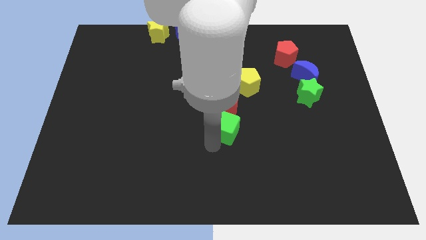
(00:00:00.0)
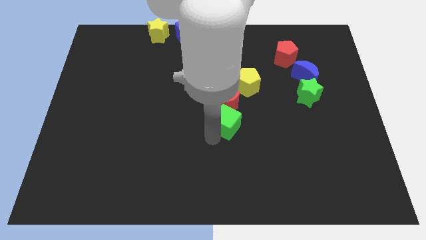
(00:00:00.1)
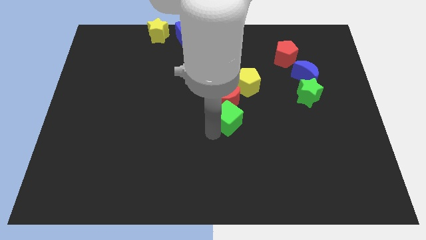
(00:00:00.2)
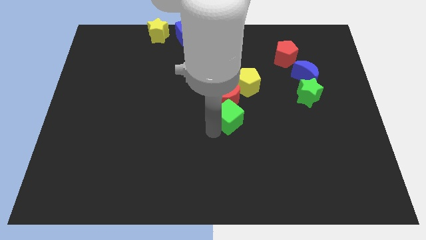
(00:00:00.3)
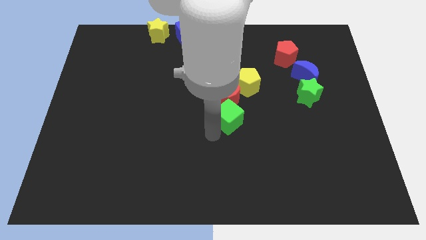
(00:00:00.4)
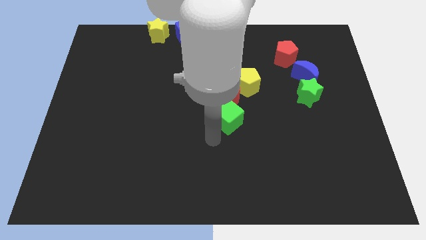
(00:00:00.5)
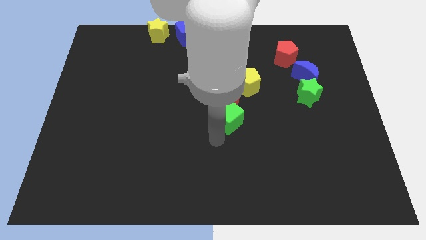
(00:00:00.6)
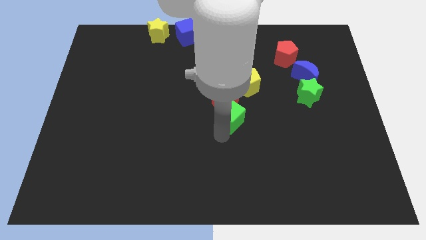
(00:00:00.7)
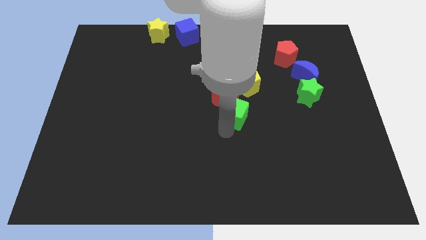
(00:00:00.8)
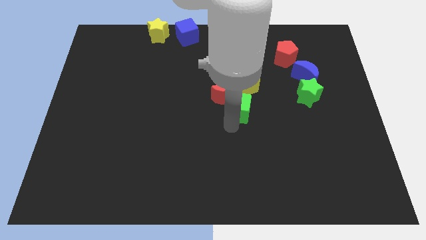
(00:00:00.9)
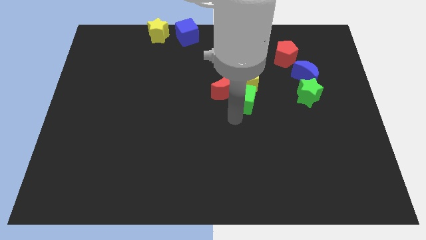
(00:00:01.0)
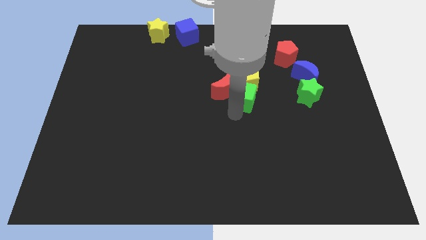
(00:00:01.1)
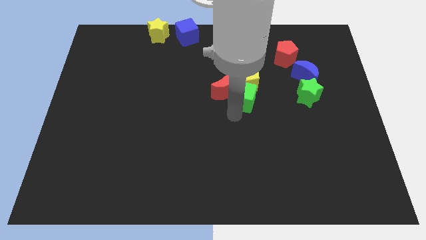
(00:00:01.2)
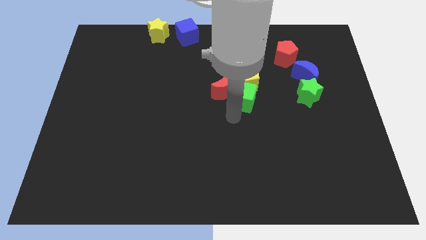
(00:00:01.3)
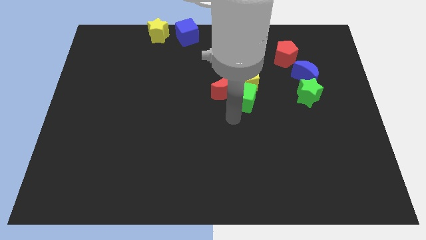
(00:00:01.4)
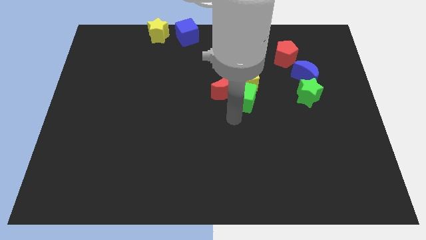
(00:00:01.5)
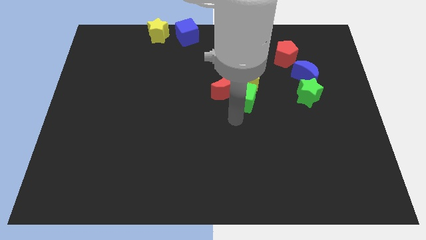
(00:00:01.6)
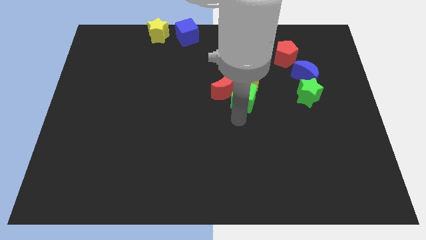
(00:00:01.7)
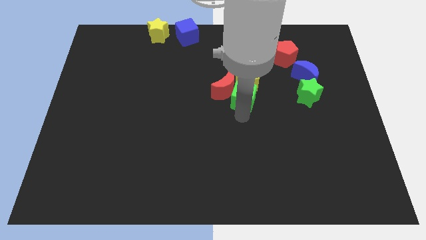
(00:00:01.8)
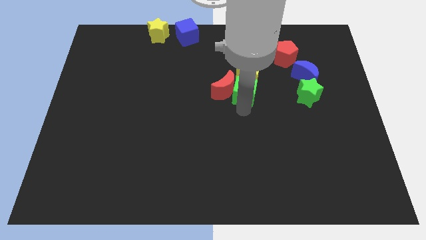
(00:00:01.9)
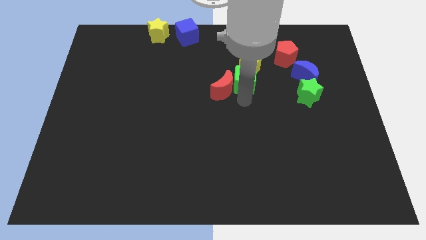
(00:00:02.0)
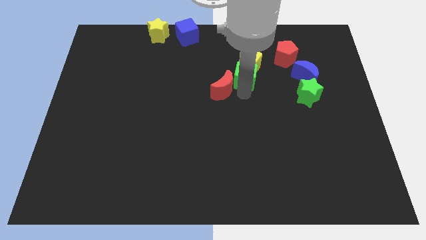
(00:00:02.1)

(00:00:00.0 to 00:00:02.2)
slide the green cube into the yellow pentagon

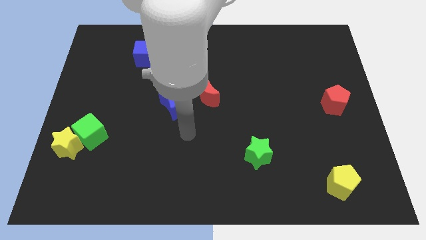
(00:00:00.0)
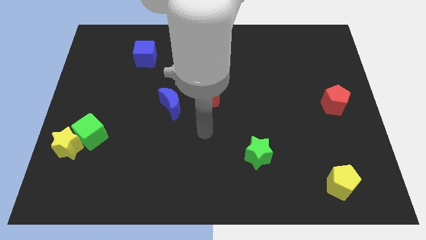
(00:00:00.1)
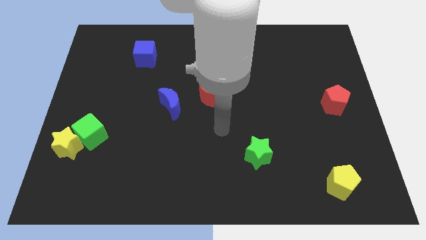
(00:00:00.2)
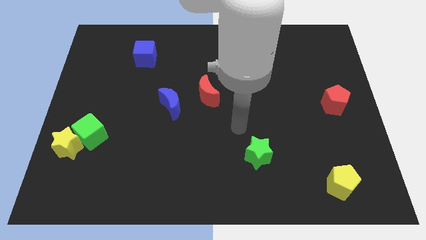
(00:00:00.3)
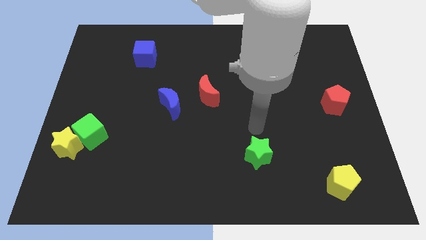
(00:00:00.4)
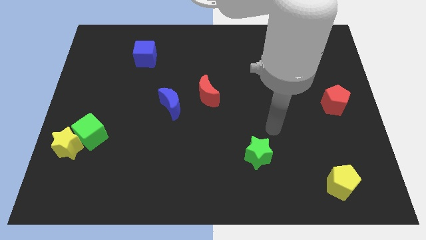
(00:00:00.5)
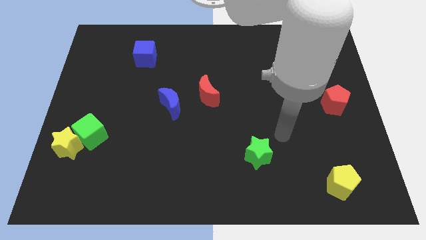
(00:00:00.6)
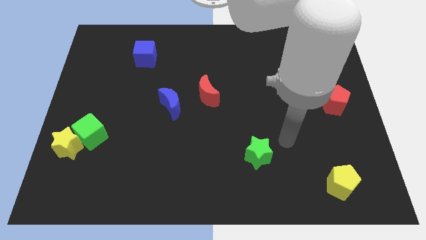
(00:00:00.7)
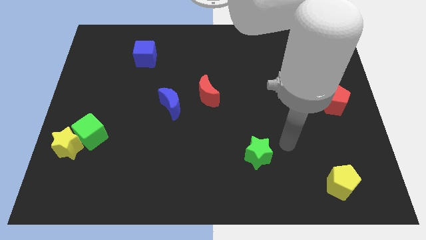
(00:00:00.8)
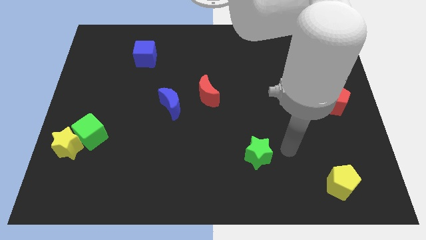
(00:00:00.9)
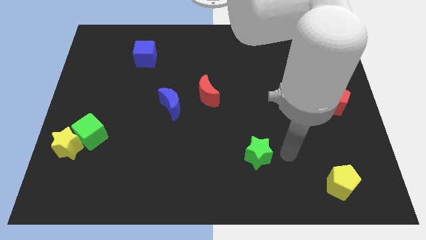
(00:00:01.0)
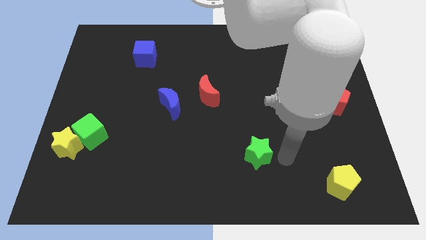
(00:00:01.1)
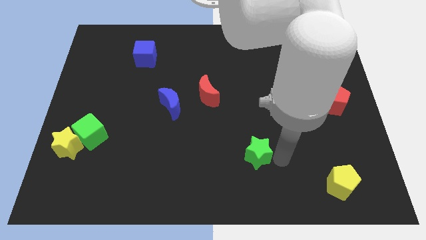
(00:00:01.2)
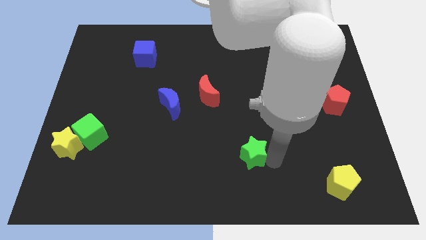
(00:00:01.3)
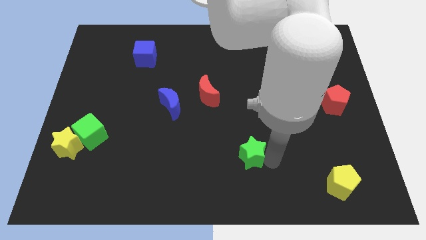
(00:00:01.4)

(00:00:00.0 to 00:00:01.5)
slightly move the green star to the left side of the board

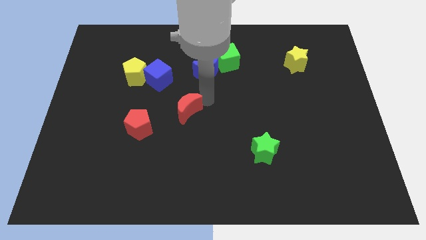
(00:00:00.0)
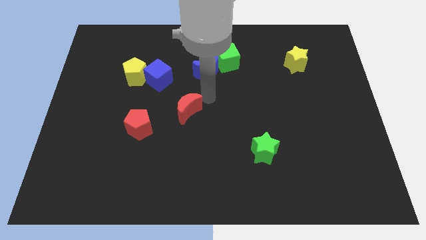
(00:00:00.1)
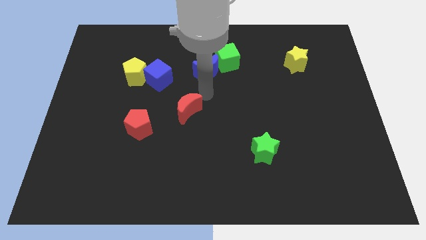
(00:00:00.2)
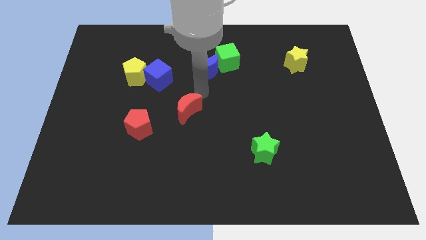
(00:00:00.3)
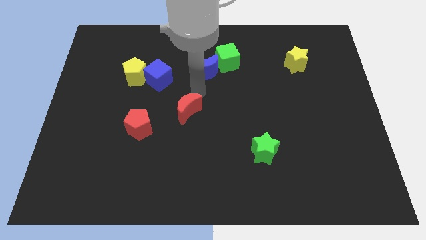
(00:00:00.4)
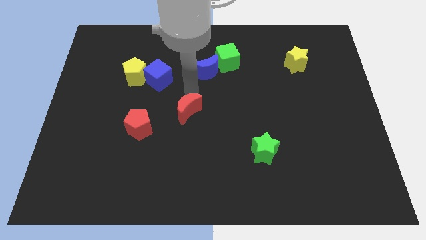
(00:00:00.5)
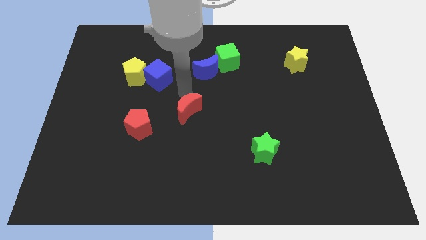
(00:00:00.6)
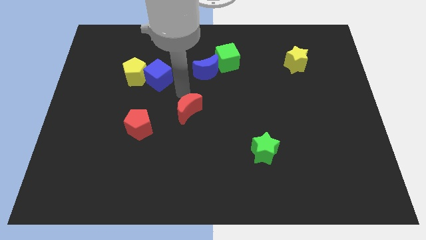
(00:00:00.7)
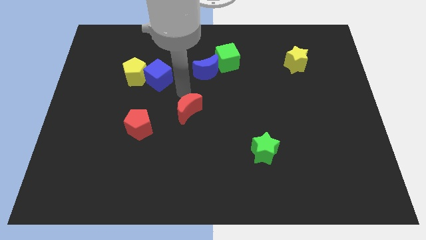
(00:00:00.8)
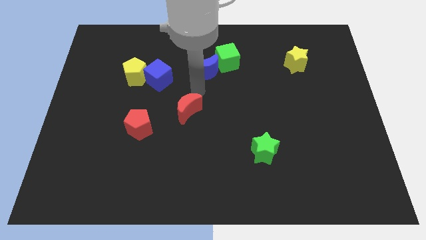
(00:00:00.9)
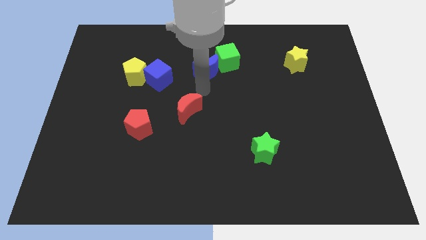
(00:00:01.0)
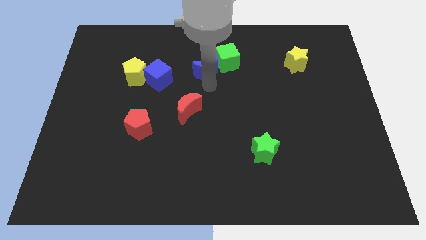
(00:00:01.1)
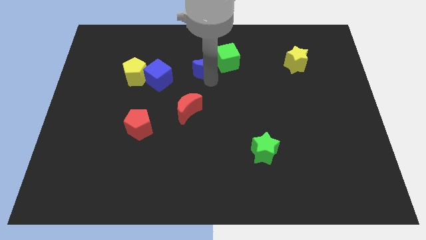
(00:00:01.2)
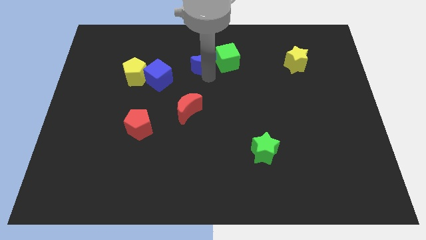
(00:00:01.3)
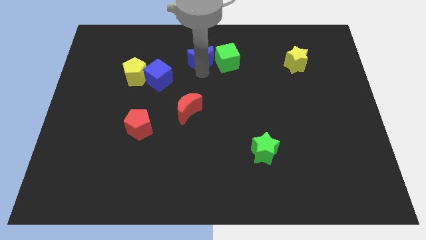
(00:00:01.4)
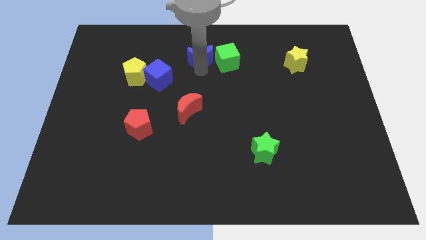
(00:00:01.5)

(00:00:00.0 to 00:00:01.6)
slightly push the blue crescent towards the top center of the board

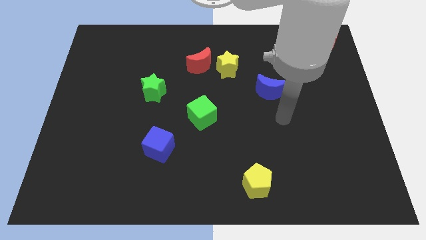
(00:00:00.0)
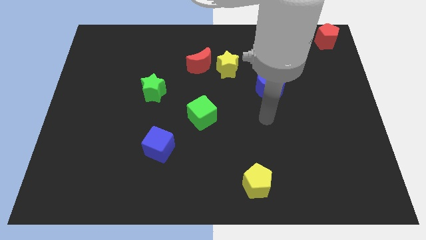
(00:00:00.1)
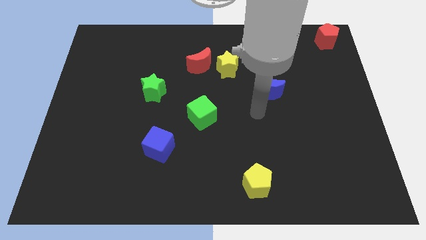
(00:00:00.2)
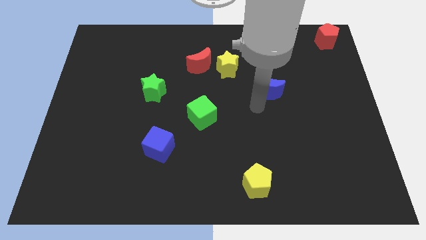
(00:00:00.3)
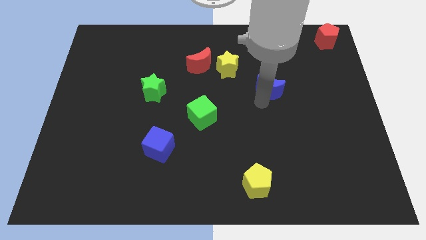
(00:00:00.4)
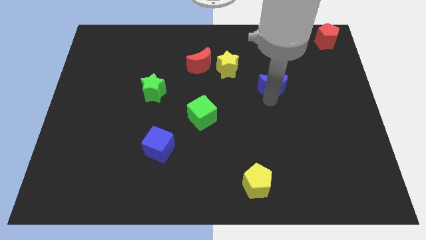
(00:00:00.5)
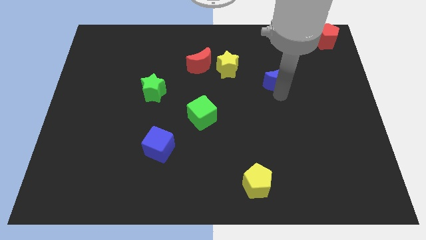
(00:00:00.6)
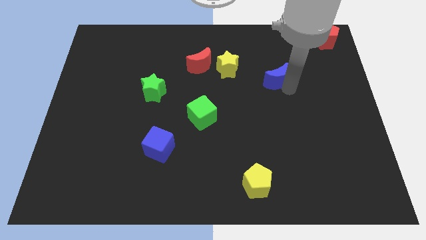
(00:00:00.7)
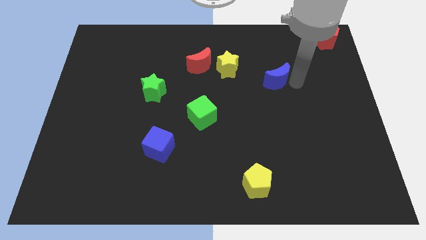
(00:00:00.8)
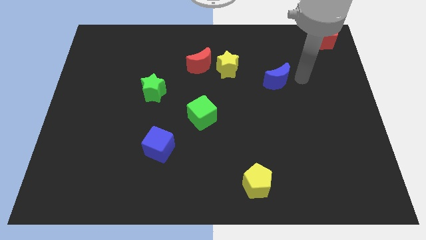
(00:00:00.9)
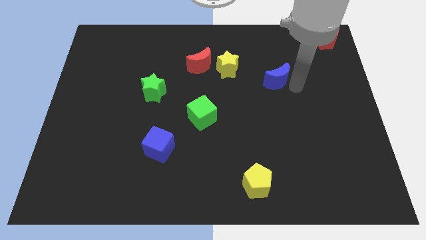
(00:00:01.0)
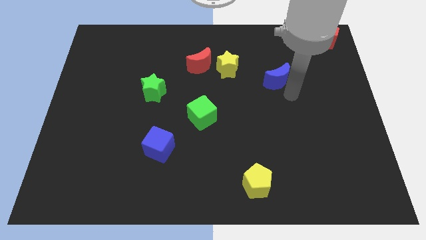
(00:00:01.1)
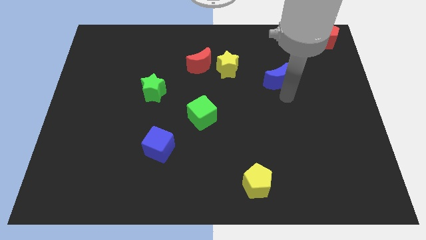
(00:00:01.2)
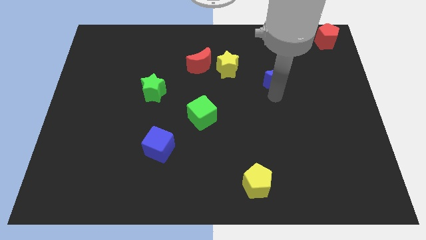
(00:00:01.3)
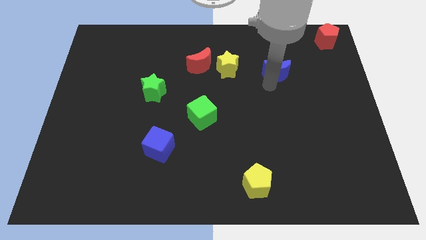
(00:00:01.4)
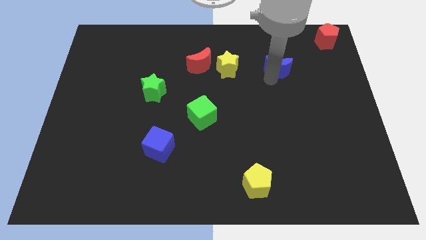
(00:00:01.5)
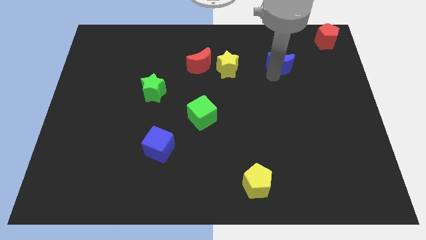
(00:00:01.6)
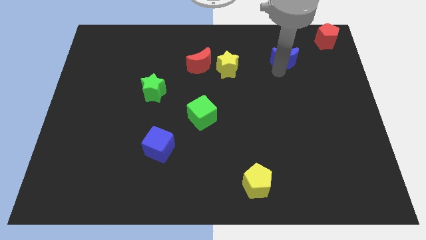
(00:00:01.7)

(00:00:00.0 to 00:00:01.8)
place the blue moon to the right of the yellow star

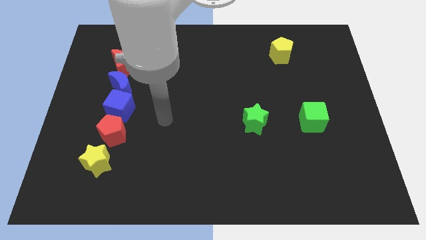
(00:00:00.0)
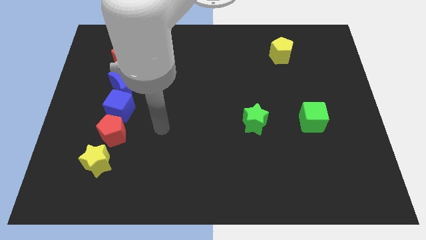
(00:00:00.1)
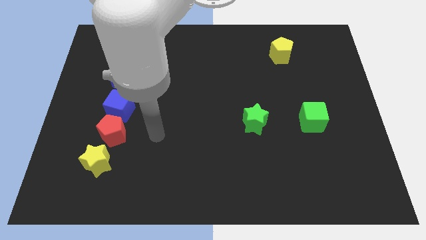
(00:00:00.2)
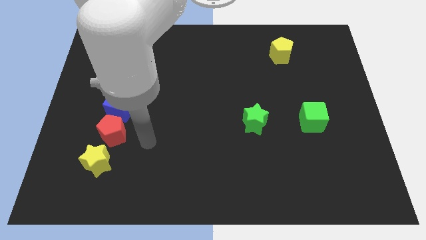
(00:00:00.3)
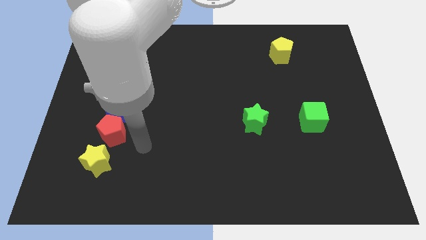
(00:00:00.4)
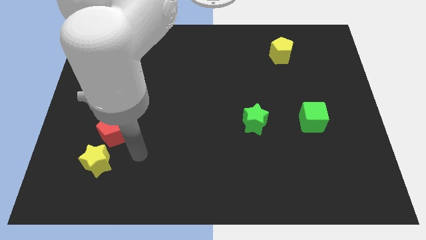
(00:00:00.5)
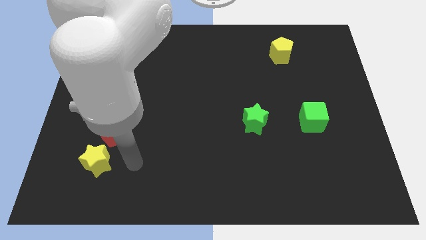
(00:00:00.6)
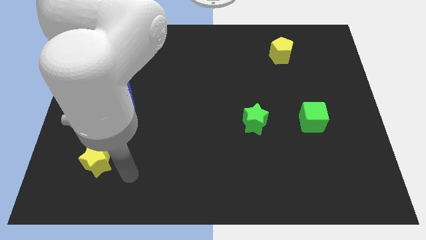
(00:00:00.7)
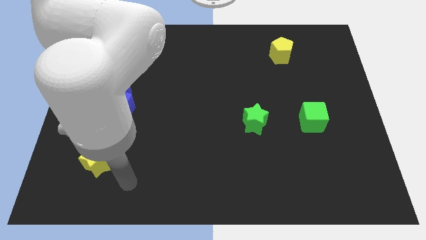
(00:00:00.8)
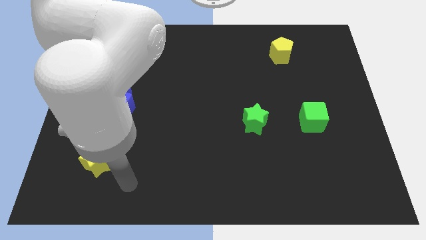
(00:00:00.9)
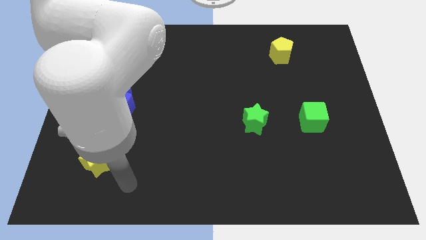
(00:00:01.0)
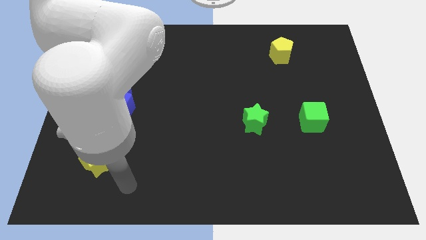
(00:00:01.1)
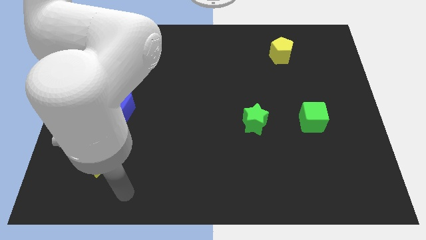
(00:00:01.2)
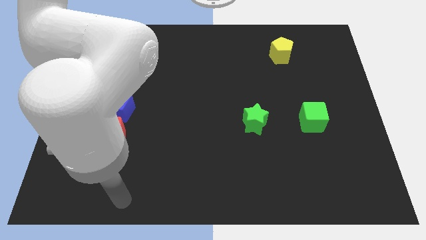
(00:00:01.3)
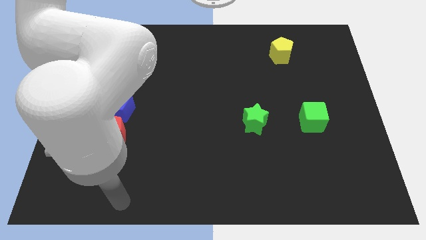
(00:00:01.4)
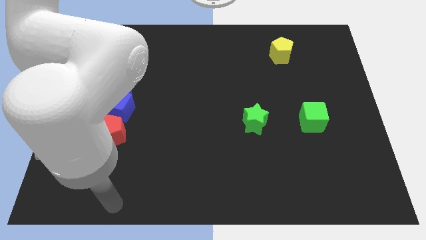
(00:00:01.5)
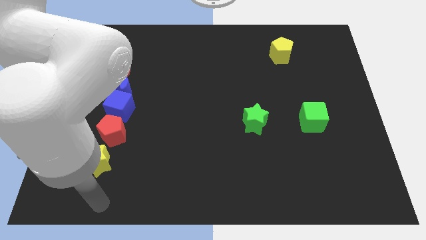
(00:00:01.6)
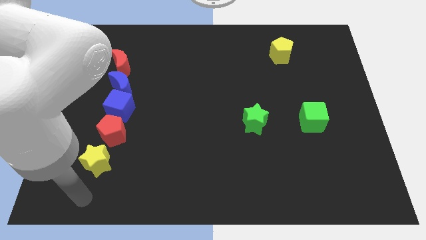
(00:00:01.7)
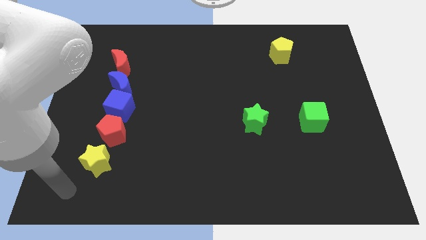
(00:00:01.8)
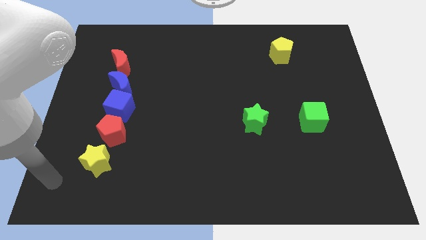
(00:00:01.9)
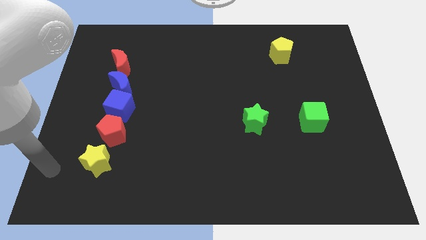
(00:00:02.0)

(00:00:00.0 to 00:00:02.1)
move your arm to the bottom left of the yellow star
